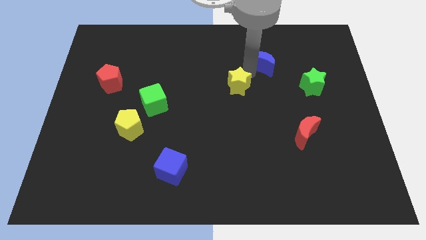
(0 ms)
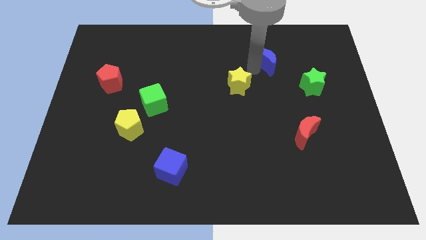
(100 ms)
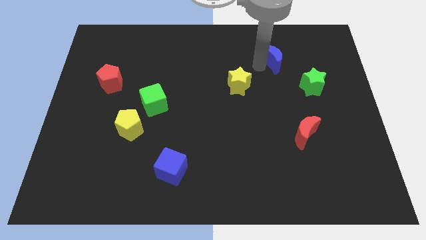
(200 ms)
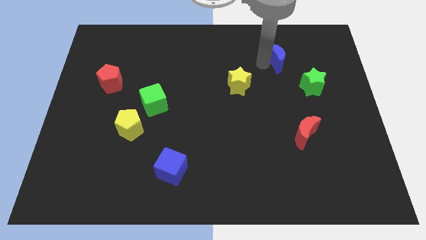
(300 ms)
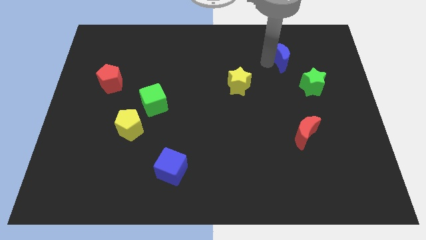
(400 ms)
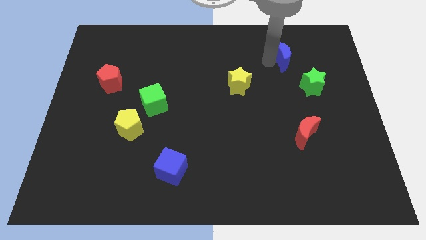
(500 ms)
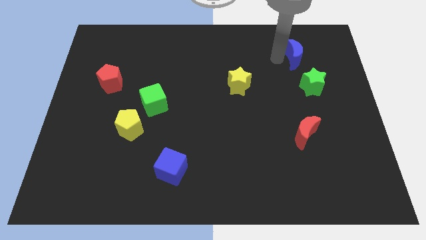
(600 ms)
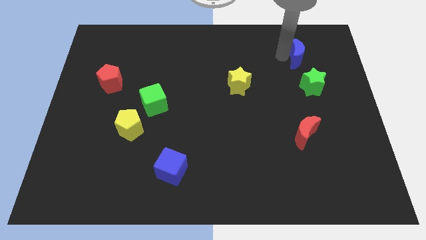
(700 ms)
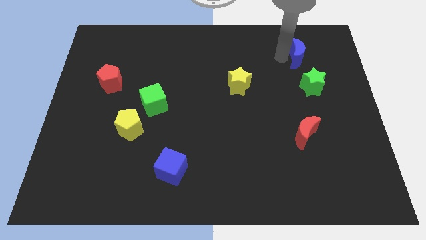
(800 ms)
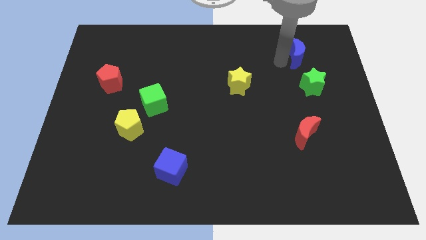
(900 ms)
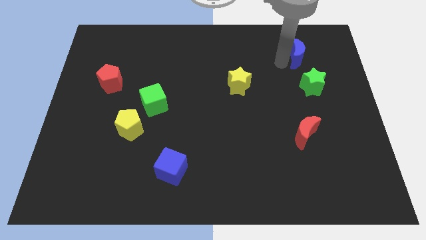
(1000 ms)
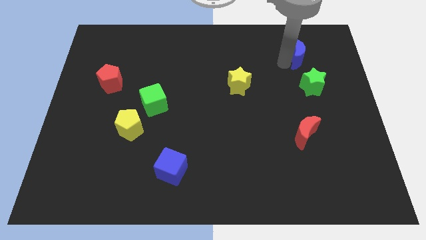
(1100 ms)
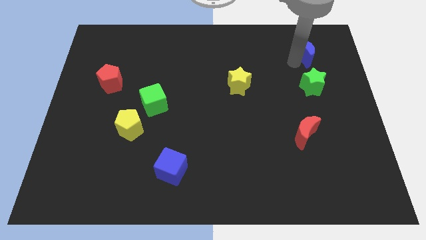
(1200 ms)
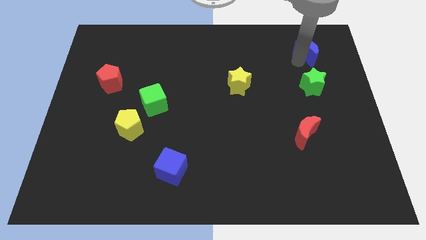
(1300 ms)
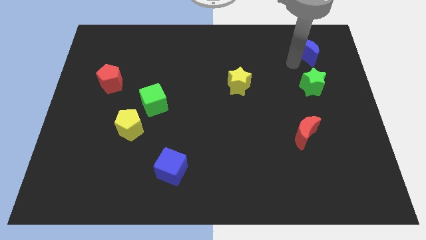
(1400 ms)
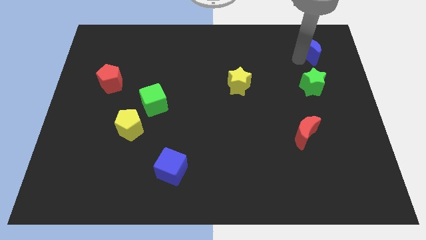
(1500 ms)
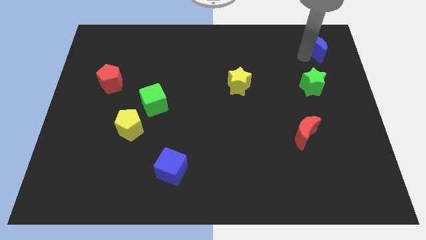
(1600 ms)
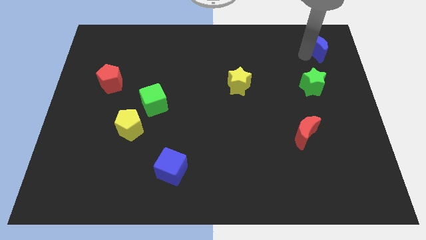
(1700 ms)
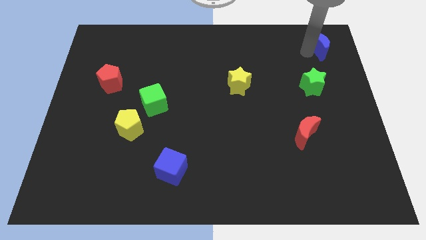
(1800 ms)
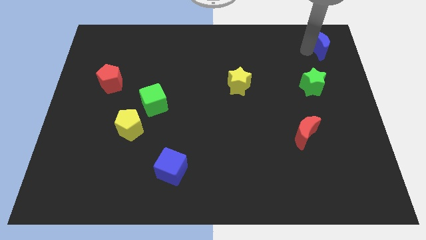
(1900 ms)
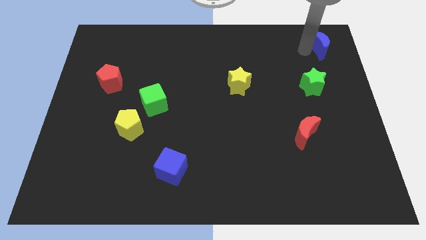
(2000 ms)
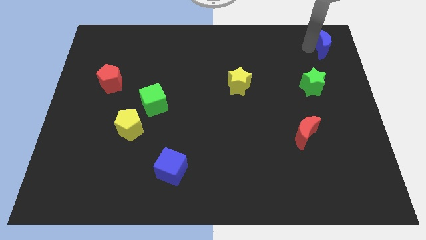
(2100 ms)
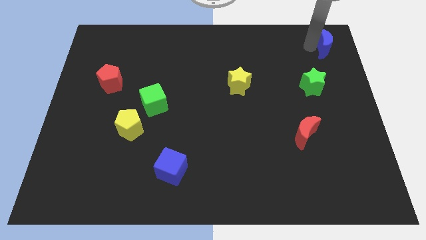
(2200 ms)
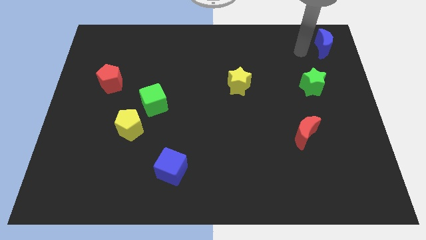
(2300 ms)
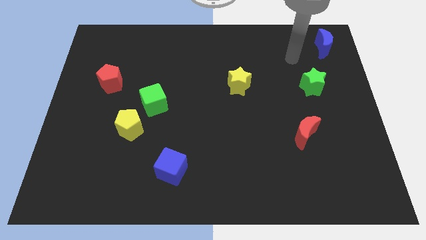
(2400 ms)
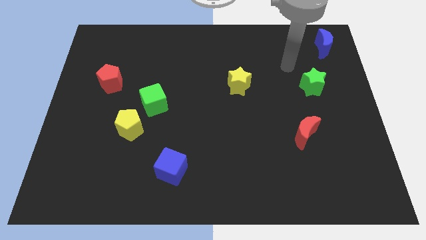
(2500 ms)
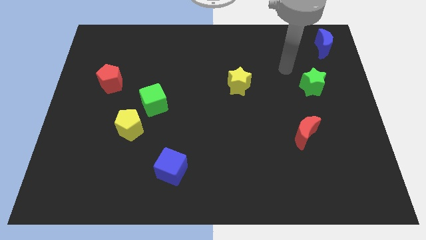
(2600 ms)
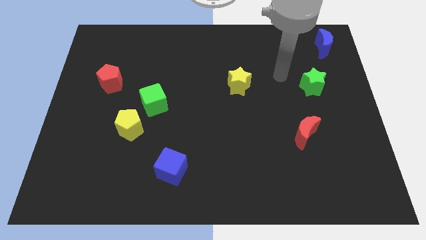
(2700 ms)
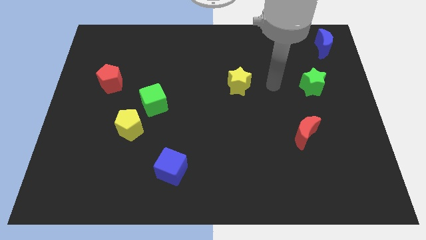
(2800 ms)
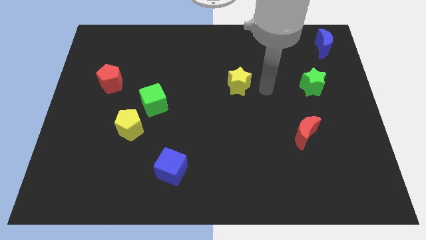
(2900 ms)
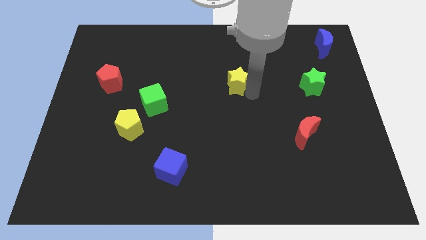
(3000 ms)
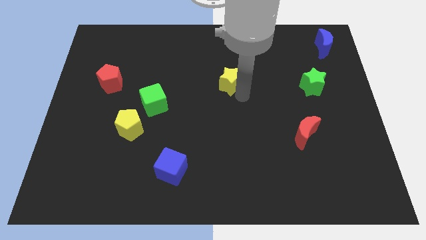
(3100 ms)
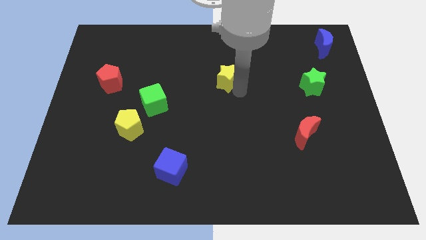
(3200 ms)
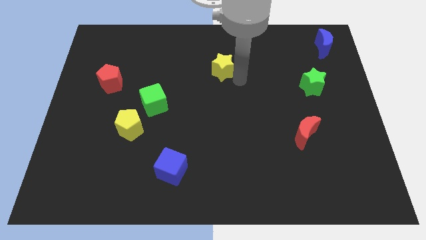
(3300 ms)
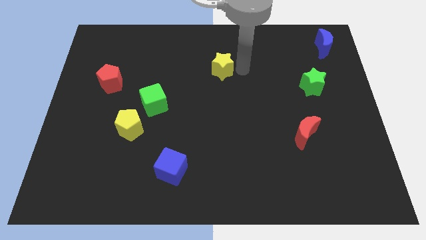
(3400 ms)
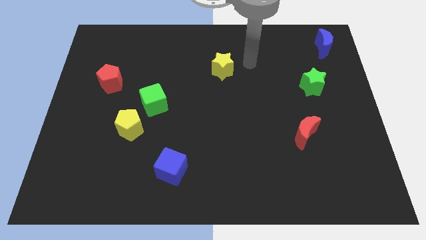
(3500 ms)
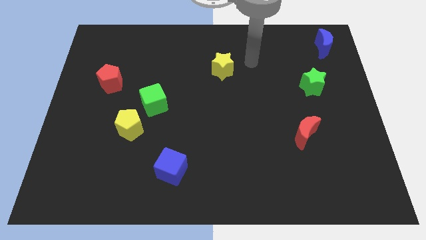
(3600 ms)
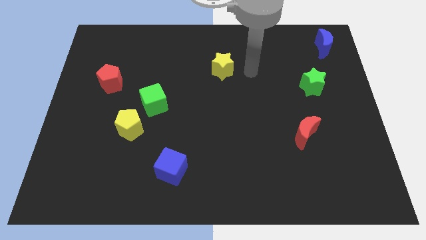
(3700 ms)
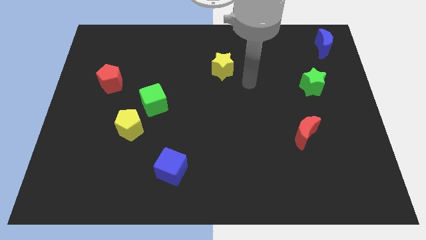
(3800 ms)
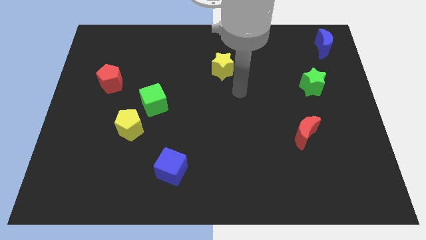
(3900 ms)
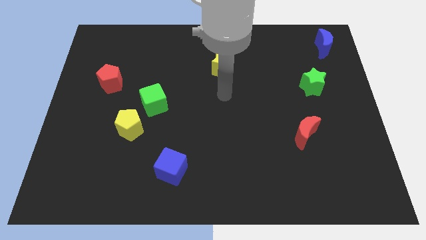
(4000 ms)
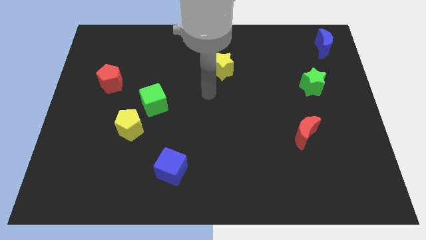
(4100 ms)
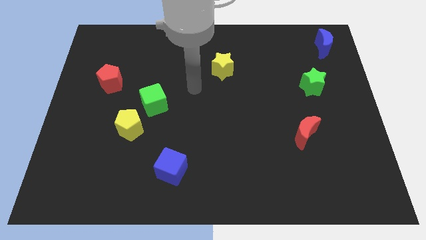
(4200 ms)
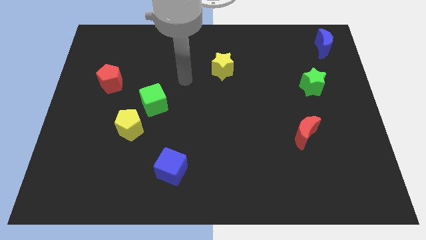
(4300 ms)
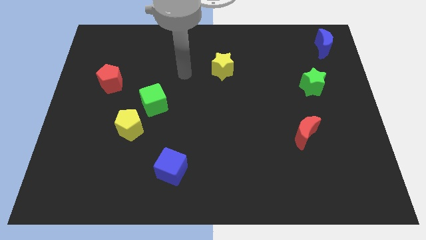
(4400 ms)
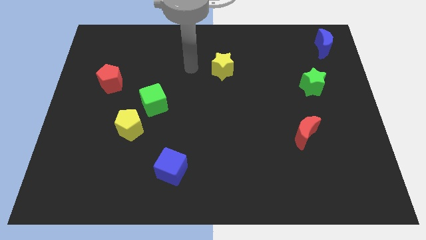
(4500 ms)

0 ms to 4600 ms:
move the yellow star and the blue moon away from each other

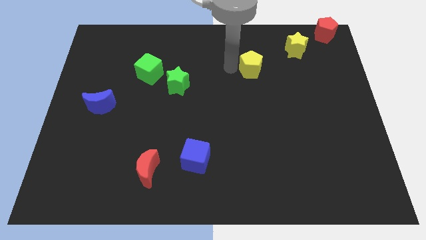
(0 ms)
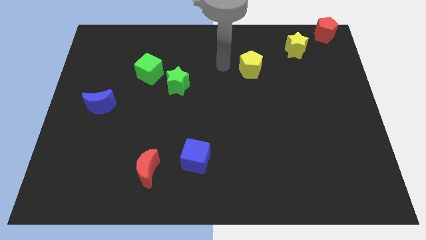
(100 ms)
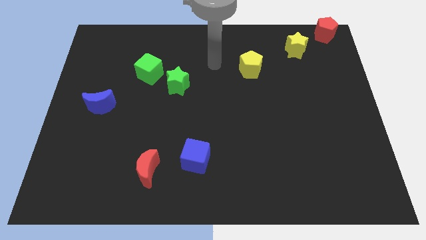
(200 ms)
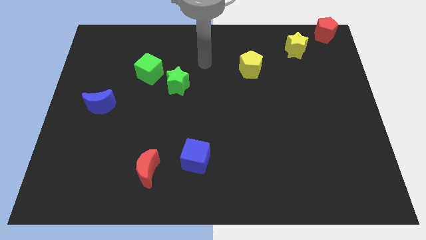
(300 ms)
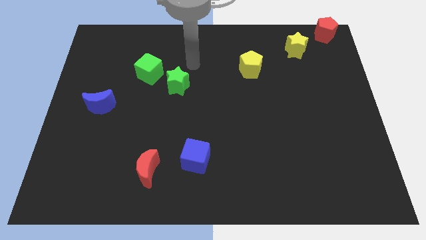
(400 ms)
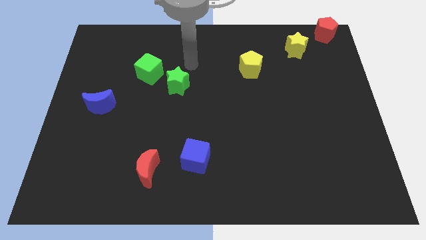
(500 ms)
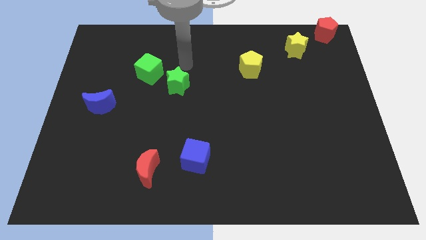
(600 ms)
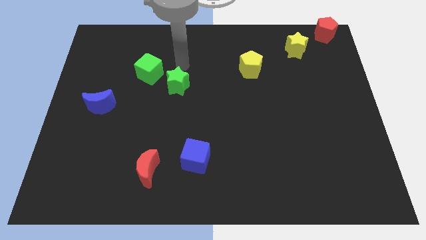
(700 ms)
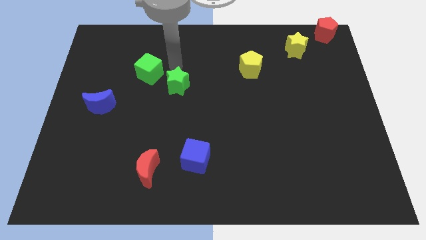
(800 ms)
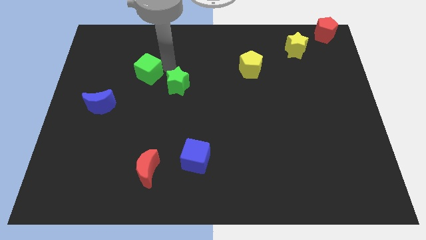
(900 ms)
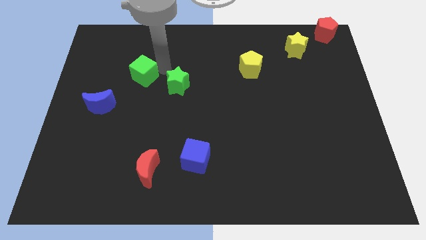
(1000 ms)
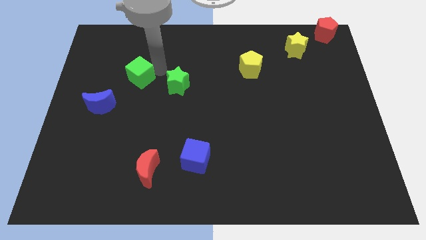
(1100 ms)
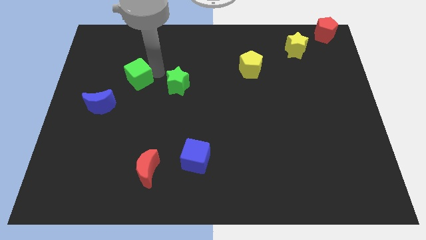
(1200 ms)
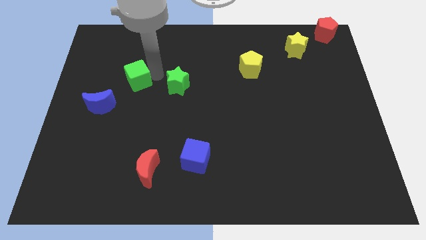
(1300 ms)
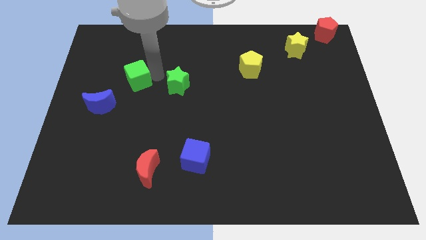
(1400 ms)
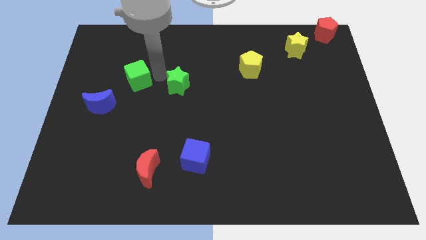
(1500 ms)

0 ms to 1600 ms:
slightly move the green cube to the left side

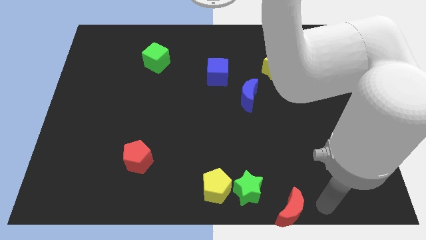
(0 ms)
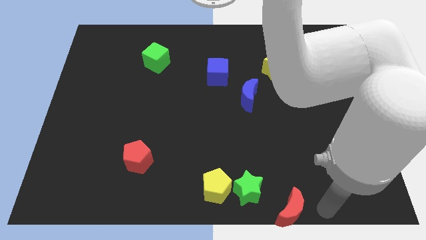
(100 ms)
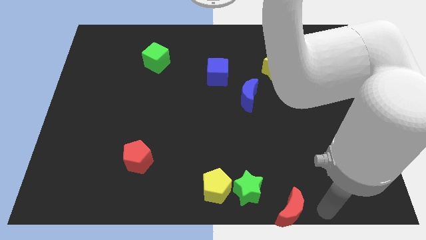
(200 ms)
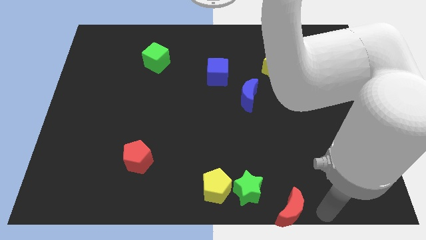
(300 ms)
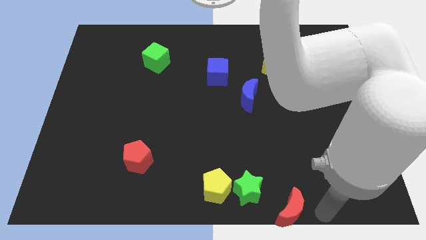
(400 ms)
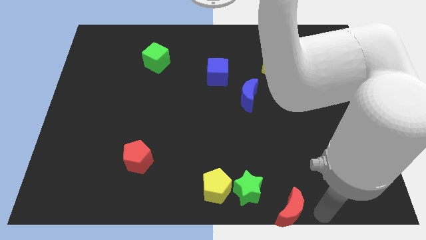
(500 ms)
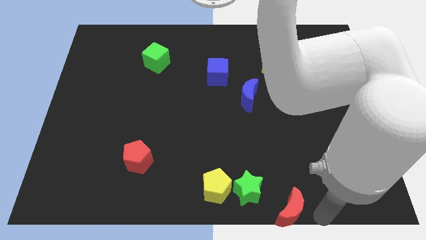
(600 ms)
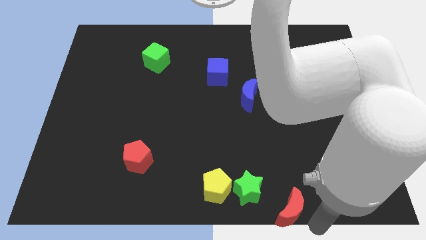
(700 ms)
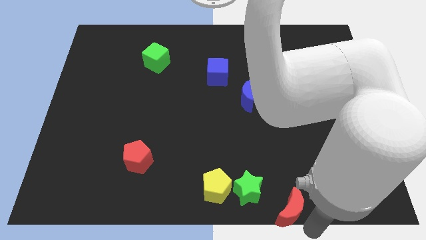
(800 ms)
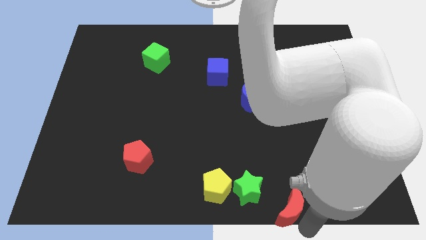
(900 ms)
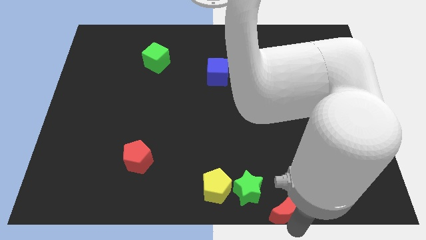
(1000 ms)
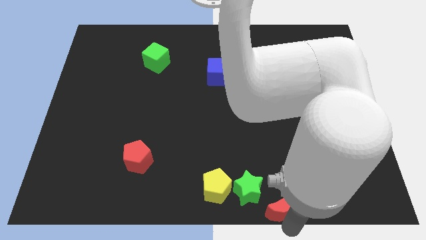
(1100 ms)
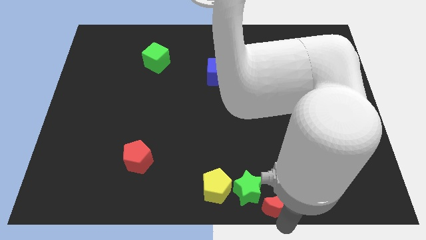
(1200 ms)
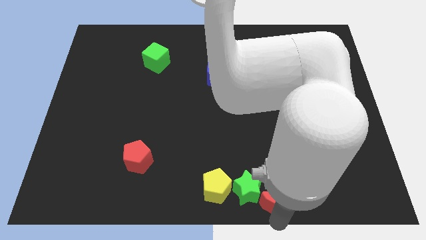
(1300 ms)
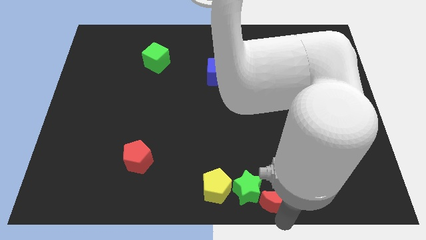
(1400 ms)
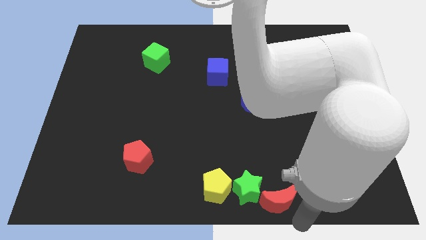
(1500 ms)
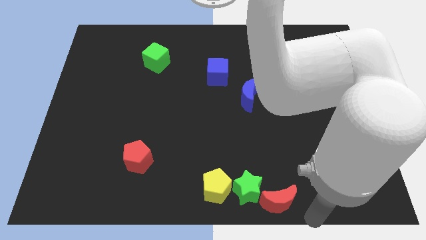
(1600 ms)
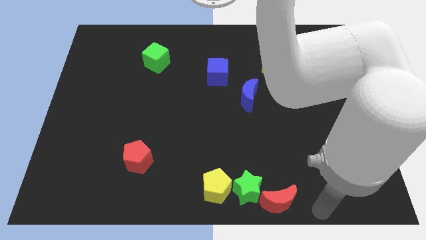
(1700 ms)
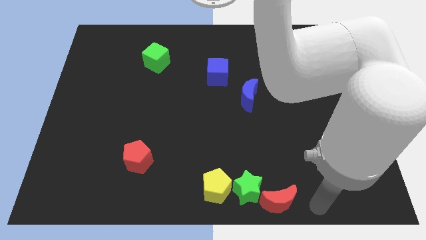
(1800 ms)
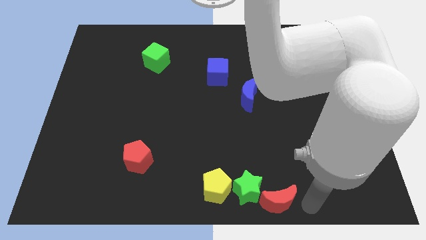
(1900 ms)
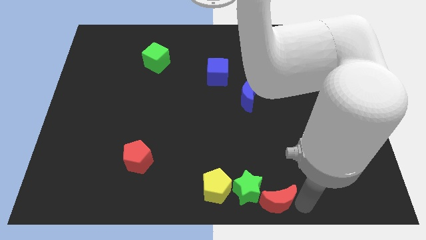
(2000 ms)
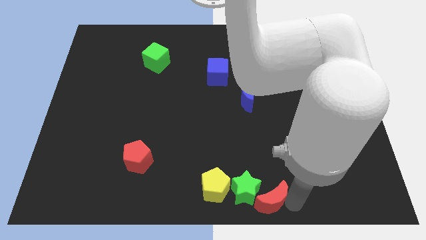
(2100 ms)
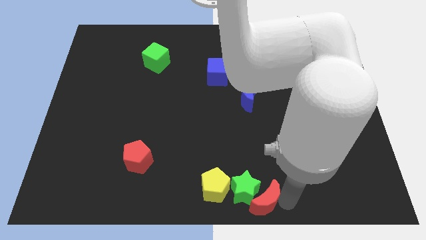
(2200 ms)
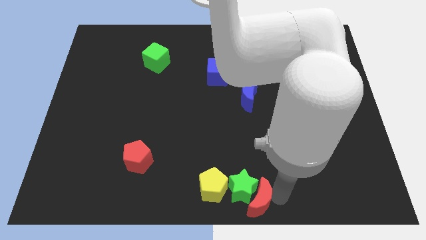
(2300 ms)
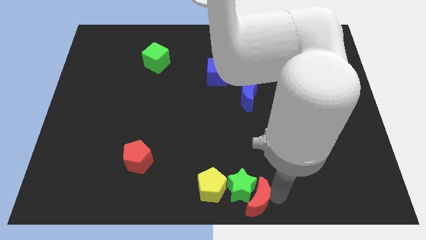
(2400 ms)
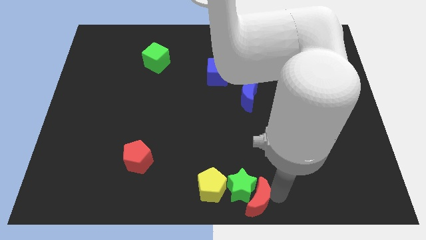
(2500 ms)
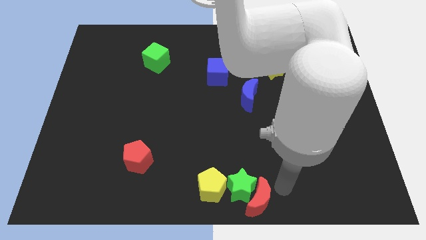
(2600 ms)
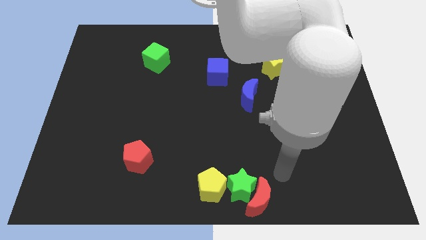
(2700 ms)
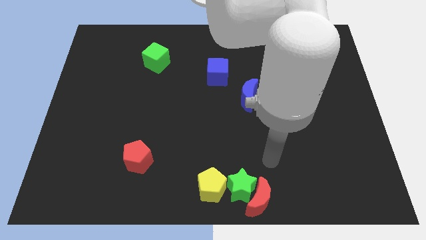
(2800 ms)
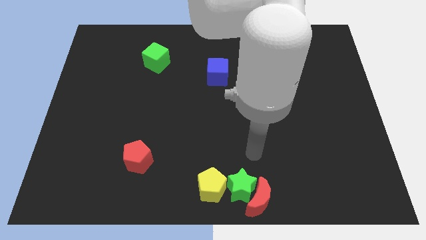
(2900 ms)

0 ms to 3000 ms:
move the red moon into the right side of the green star
